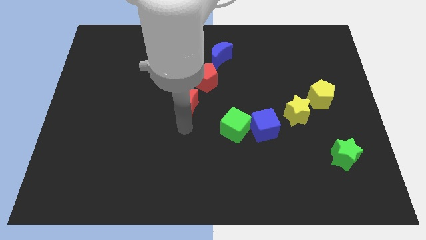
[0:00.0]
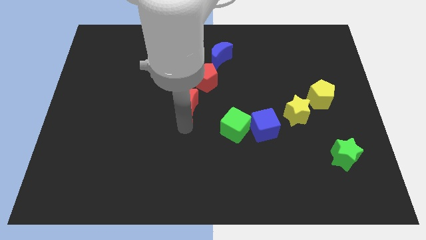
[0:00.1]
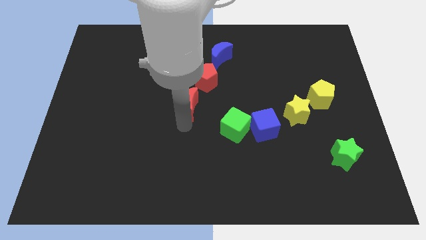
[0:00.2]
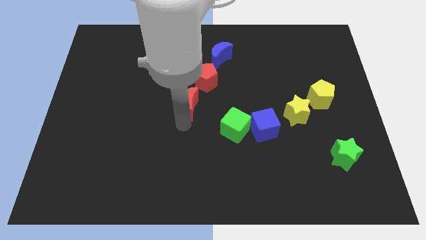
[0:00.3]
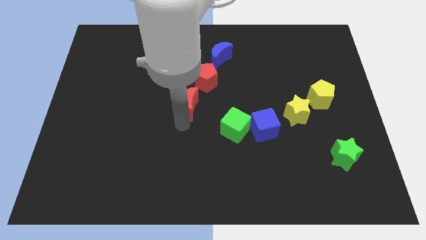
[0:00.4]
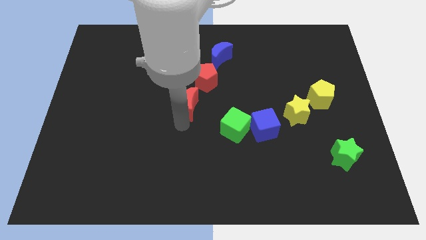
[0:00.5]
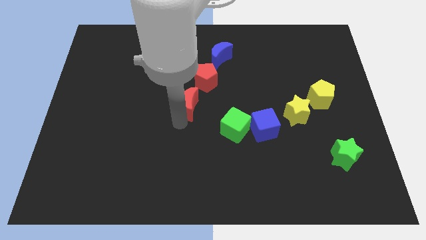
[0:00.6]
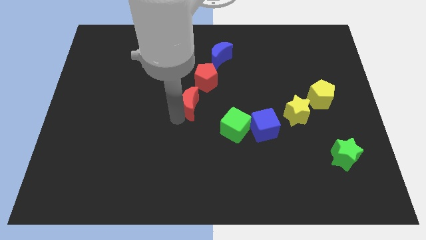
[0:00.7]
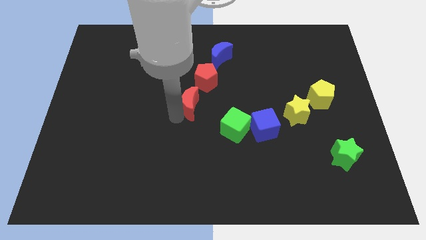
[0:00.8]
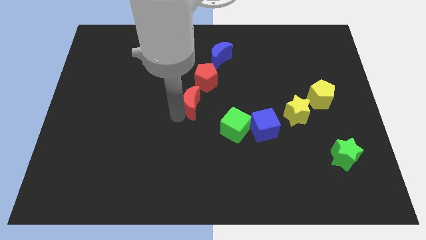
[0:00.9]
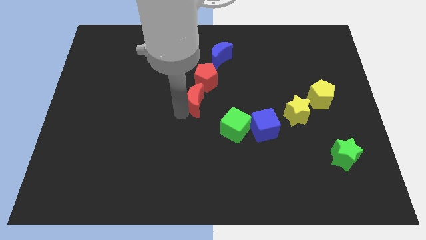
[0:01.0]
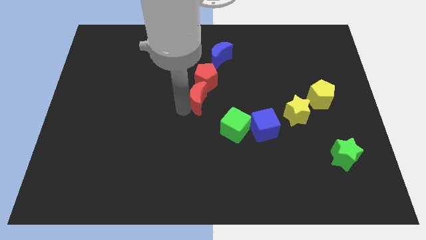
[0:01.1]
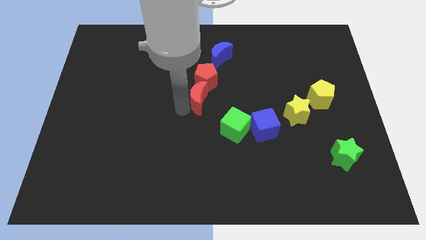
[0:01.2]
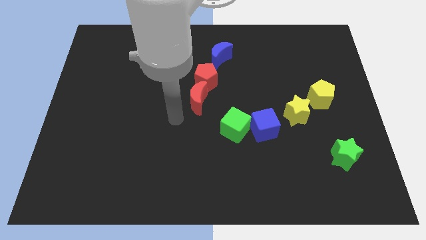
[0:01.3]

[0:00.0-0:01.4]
put the red moon at the bottom of the red pentagon

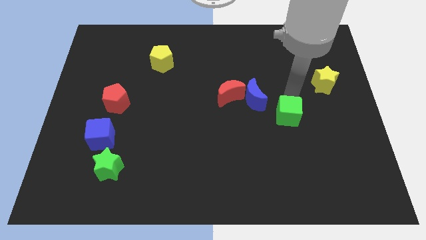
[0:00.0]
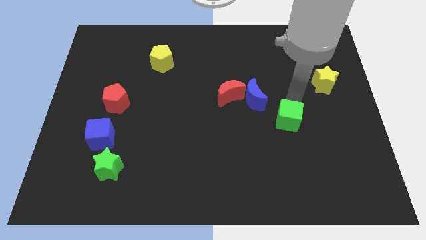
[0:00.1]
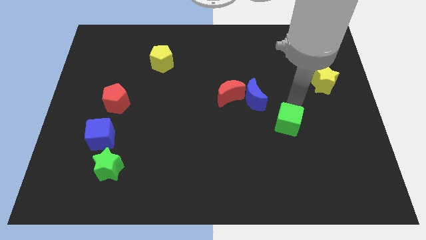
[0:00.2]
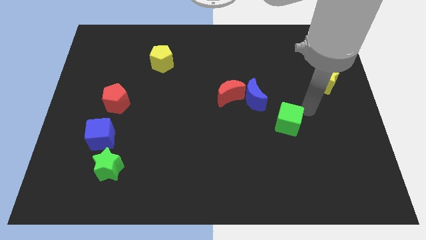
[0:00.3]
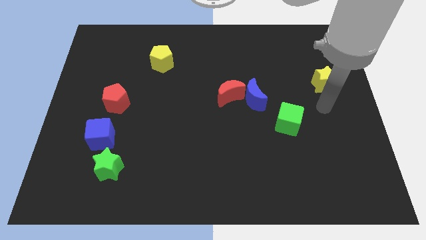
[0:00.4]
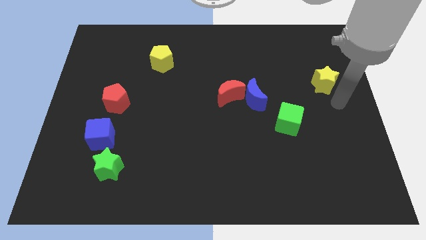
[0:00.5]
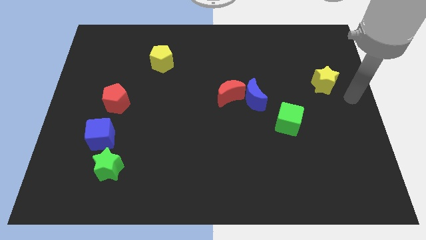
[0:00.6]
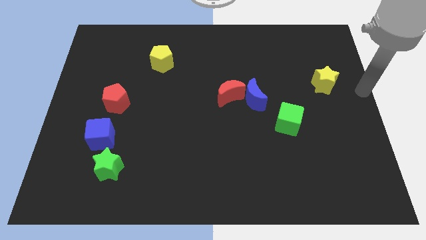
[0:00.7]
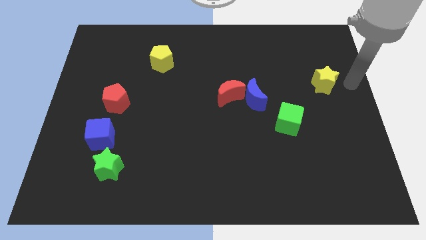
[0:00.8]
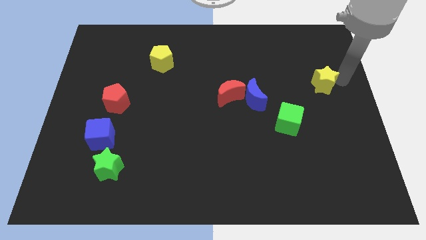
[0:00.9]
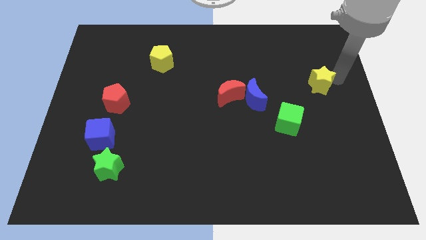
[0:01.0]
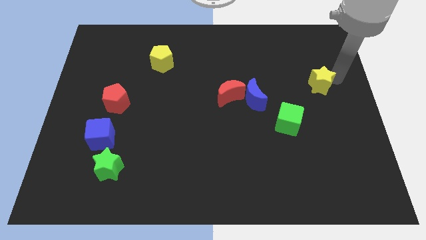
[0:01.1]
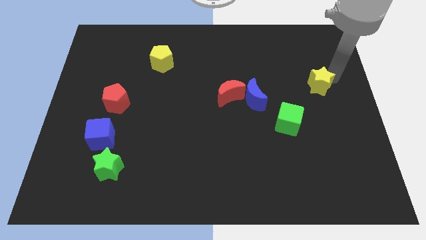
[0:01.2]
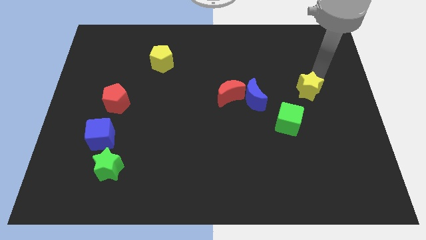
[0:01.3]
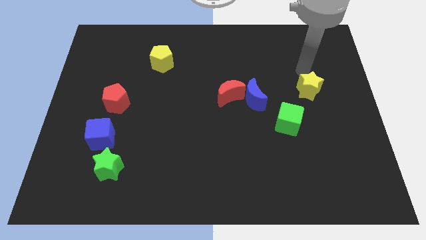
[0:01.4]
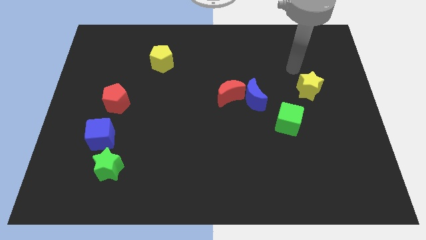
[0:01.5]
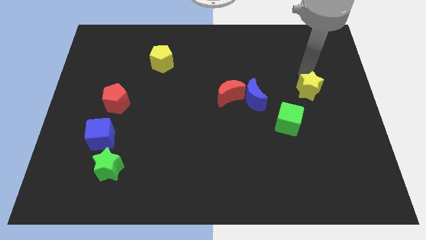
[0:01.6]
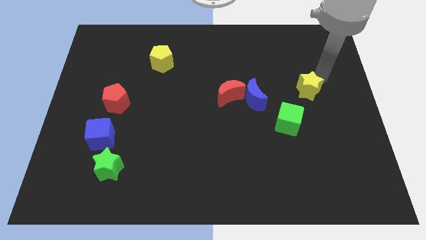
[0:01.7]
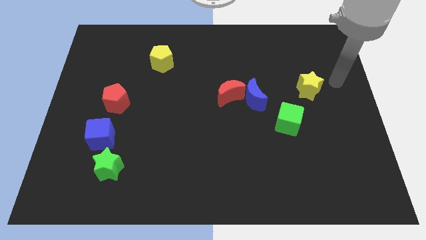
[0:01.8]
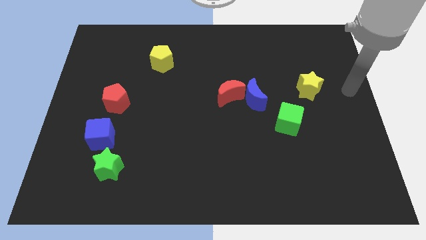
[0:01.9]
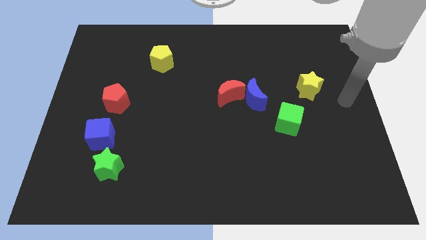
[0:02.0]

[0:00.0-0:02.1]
move yellow star slightly left

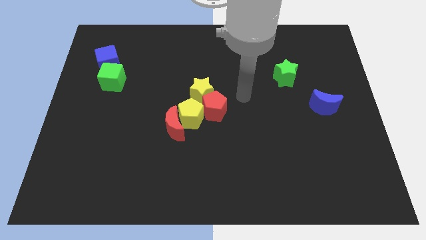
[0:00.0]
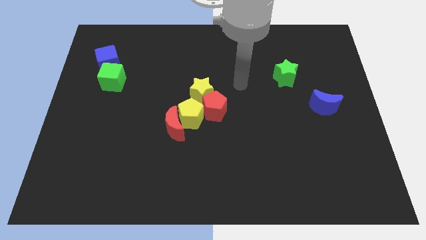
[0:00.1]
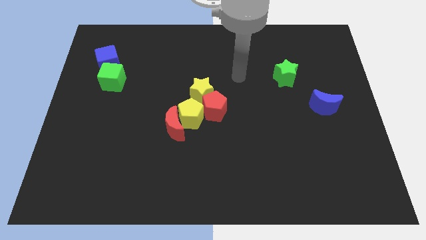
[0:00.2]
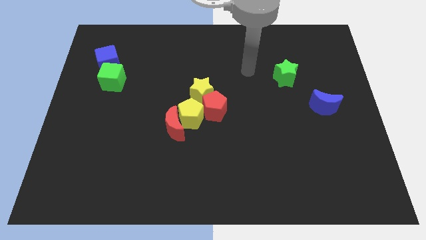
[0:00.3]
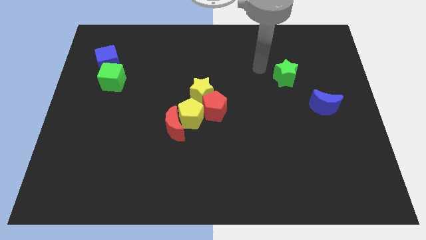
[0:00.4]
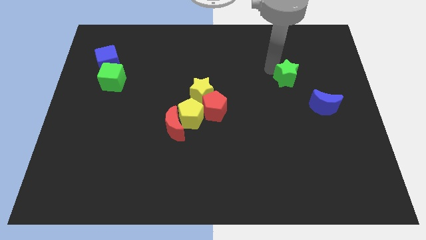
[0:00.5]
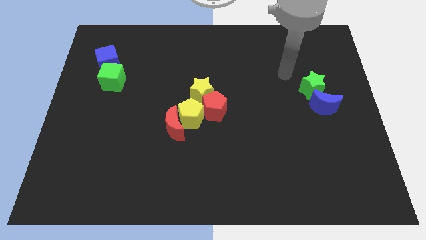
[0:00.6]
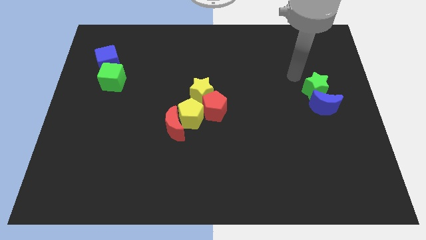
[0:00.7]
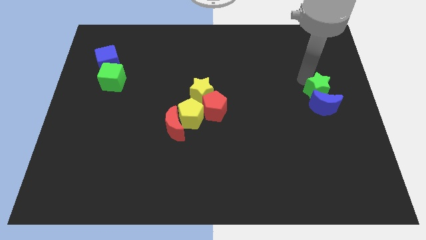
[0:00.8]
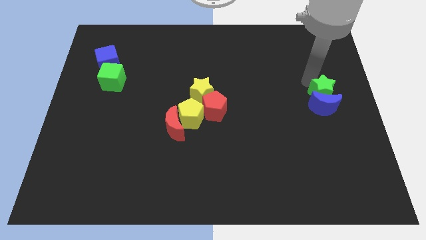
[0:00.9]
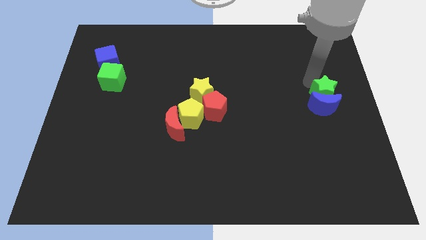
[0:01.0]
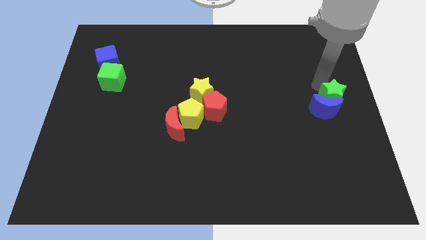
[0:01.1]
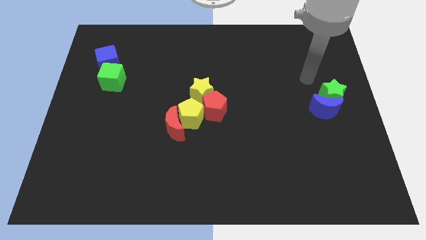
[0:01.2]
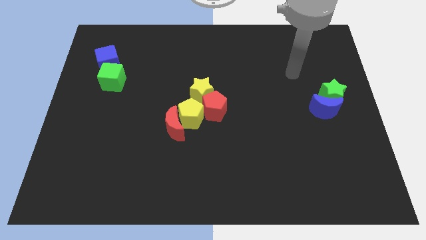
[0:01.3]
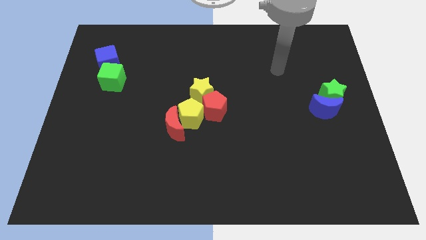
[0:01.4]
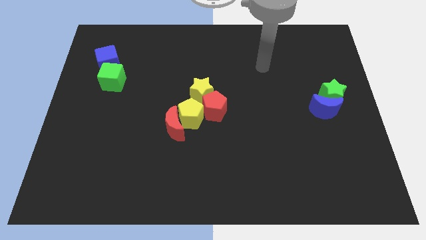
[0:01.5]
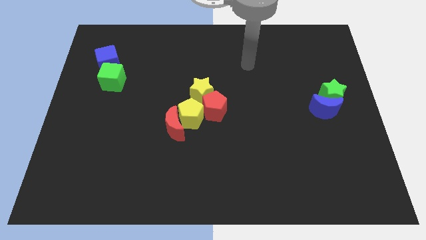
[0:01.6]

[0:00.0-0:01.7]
push the green star into the blue crescent

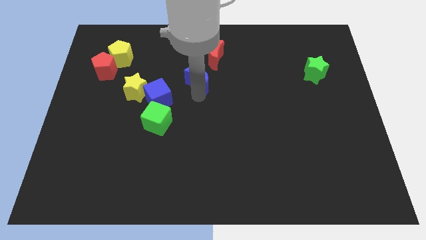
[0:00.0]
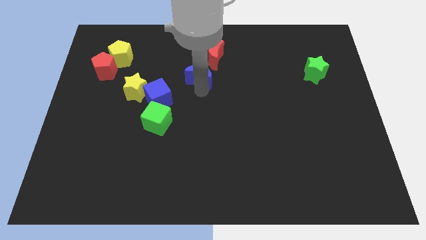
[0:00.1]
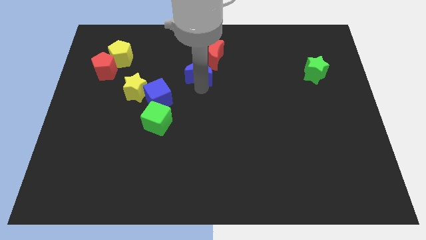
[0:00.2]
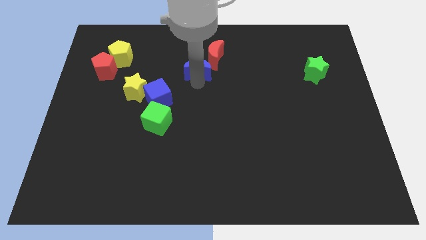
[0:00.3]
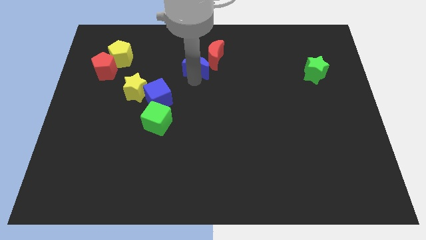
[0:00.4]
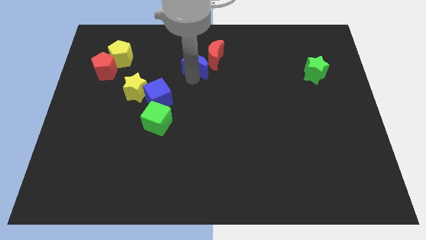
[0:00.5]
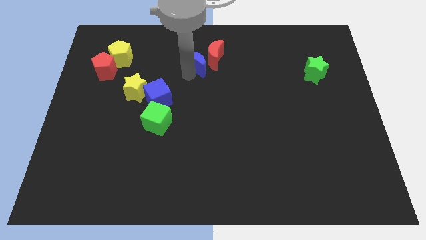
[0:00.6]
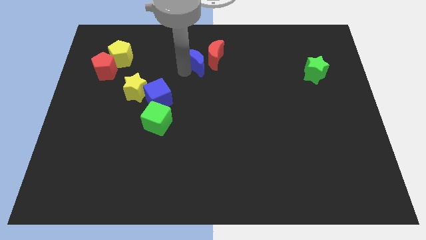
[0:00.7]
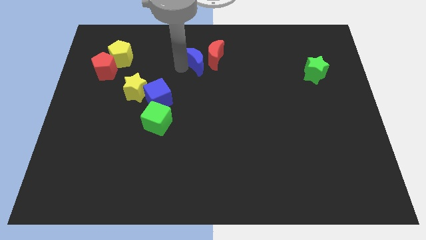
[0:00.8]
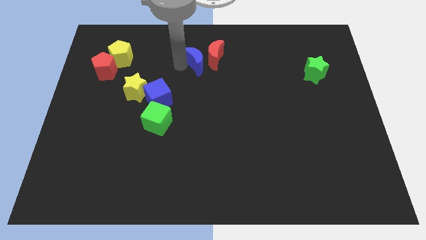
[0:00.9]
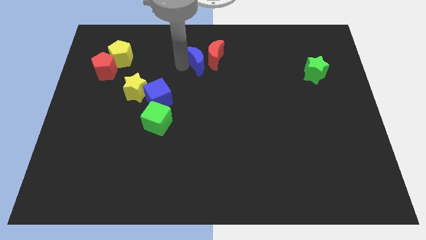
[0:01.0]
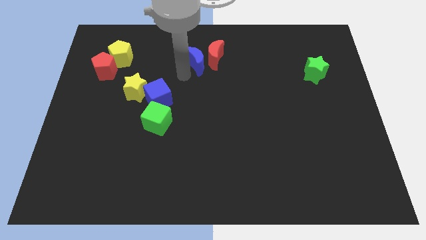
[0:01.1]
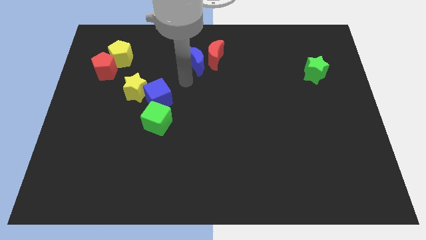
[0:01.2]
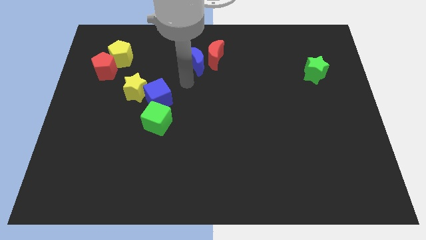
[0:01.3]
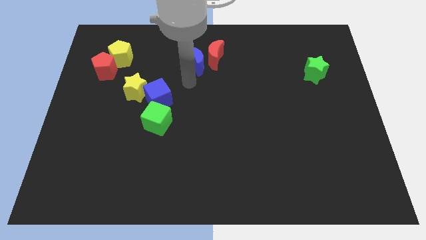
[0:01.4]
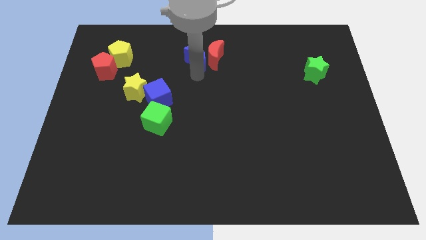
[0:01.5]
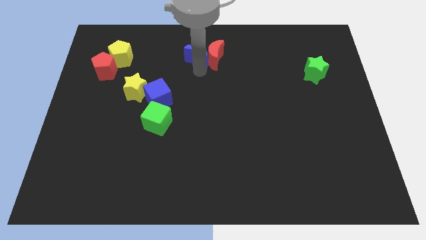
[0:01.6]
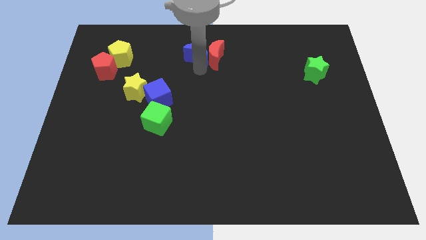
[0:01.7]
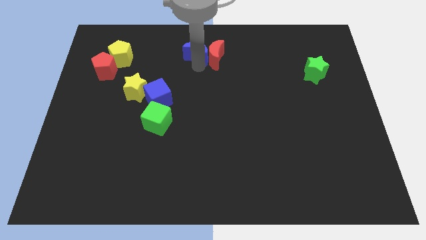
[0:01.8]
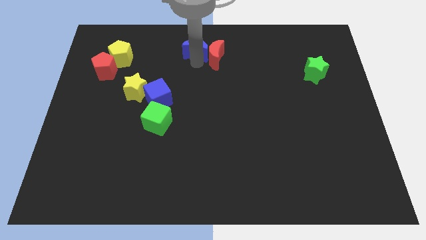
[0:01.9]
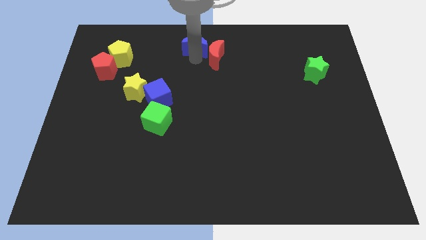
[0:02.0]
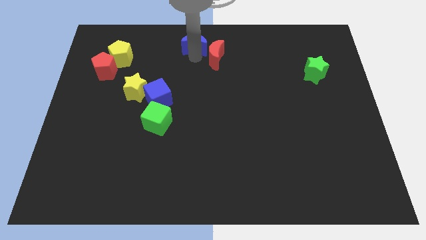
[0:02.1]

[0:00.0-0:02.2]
move the blue moon towards the top center

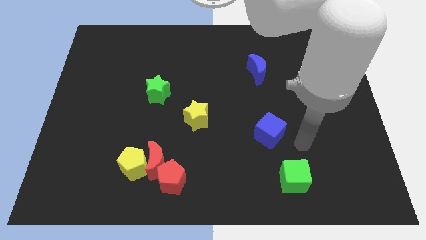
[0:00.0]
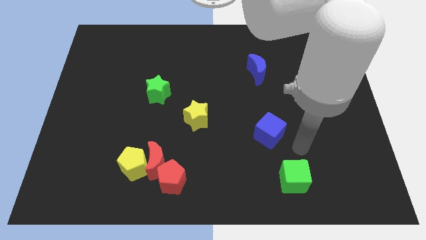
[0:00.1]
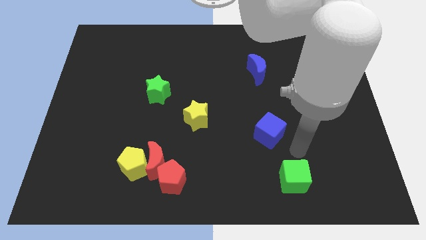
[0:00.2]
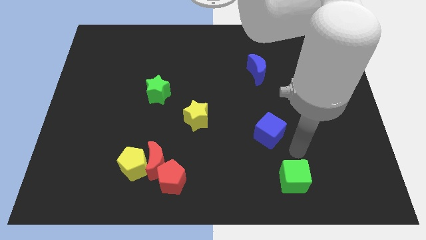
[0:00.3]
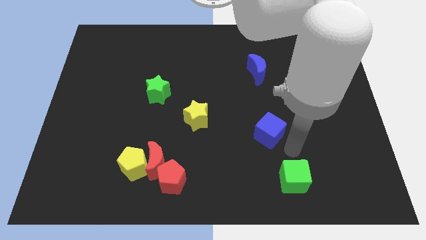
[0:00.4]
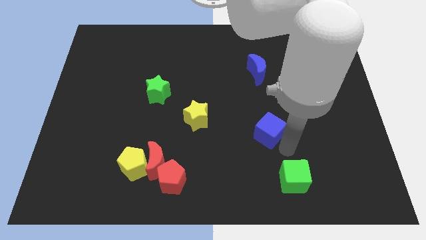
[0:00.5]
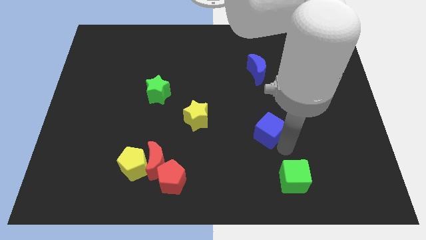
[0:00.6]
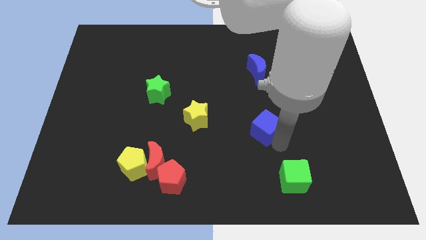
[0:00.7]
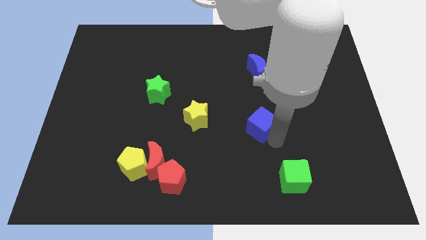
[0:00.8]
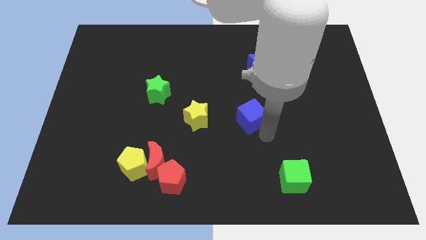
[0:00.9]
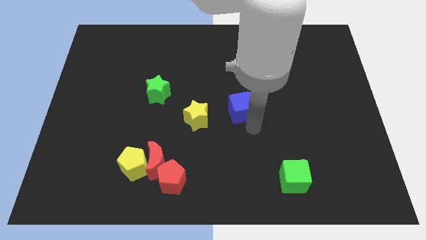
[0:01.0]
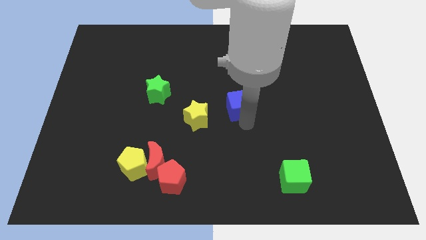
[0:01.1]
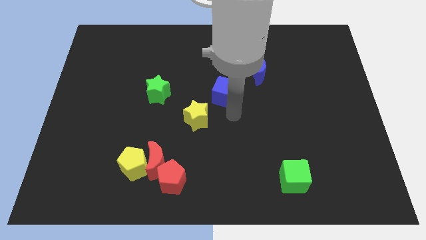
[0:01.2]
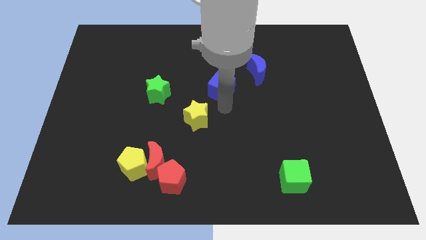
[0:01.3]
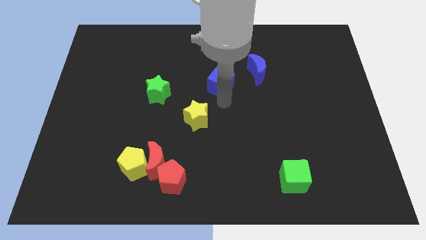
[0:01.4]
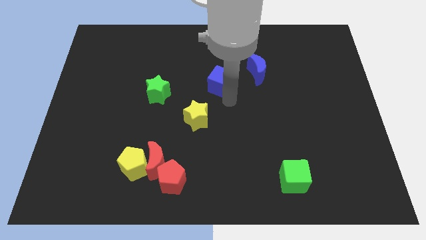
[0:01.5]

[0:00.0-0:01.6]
push the blue cube diagonally upwards
